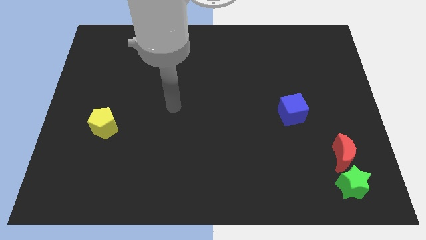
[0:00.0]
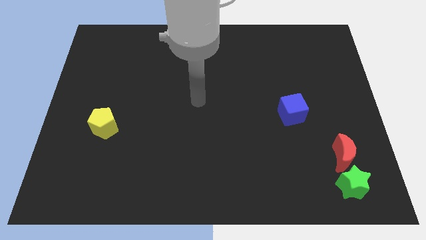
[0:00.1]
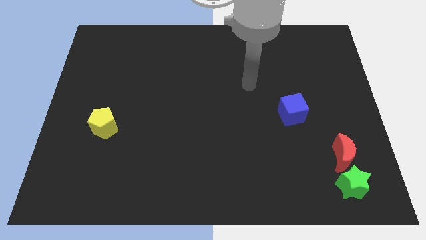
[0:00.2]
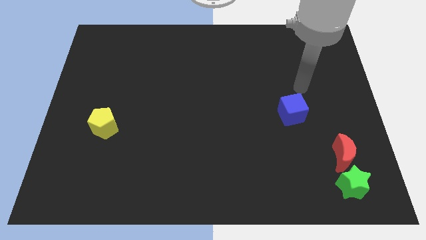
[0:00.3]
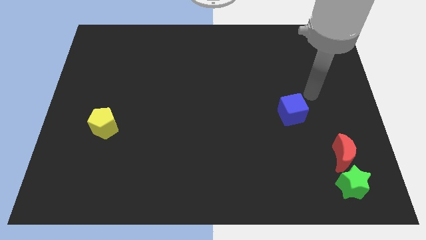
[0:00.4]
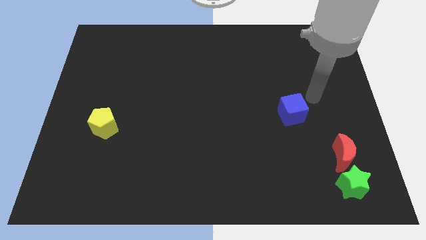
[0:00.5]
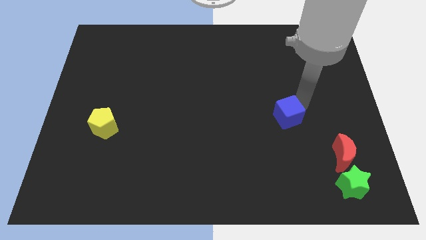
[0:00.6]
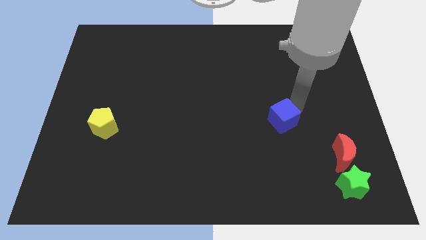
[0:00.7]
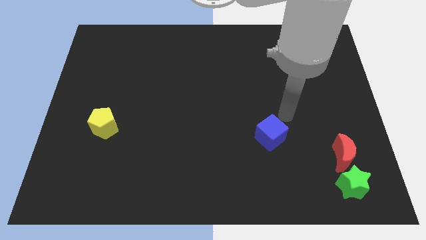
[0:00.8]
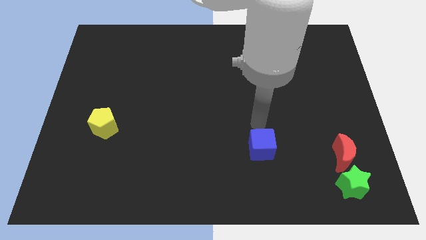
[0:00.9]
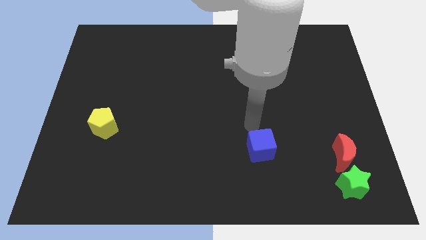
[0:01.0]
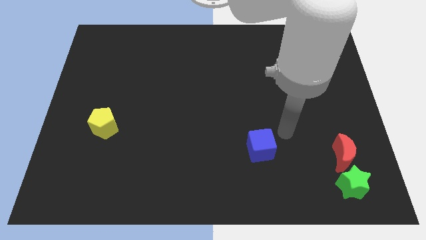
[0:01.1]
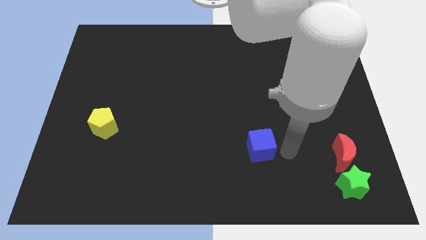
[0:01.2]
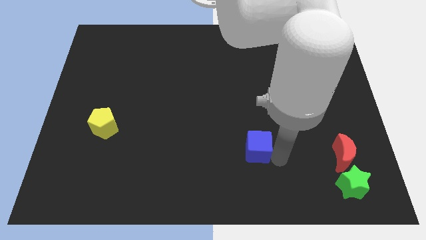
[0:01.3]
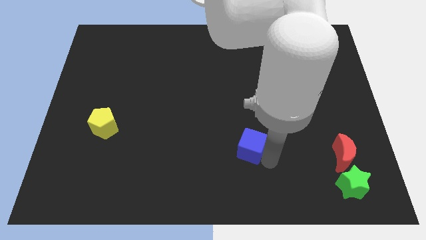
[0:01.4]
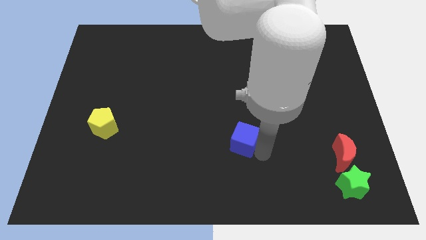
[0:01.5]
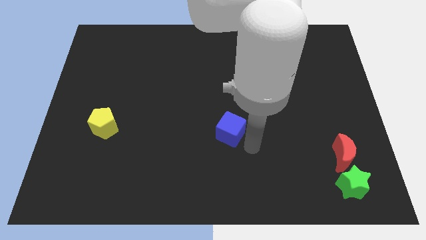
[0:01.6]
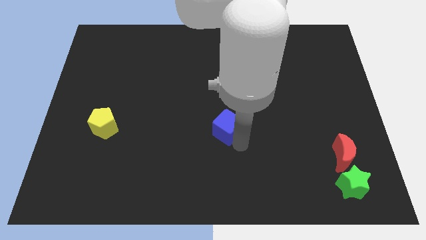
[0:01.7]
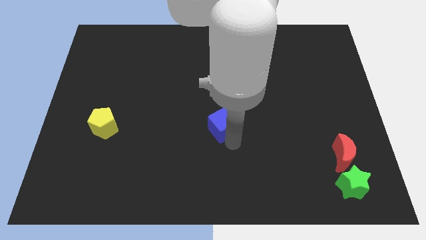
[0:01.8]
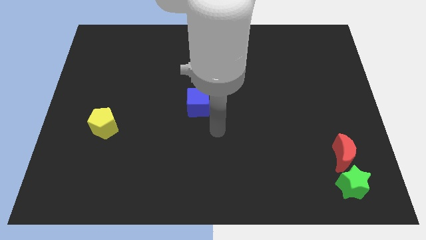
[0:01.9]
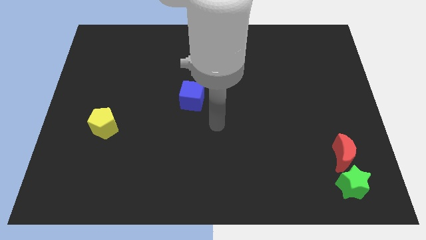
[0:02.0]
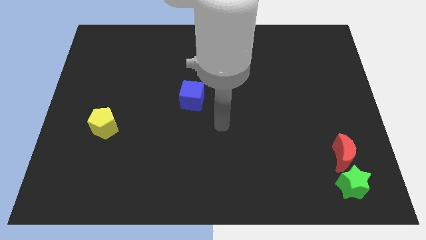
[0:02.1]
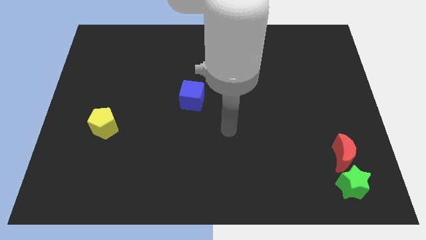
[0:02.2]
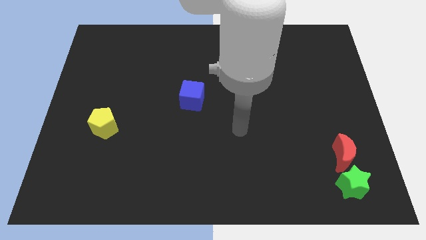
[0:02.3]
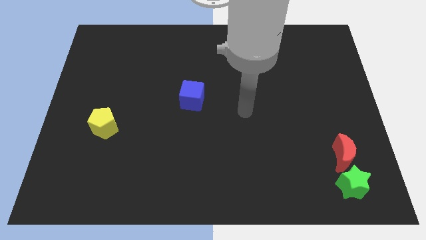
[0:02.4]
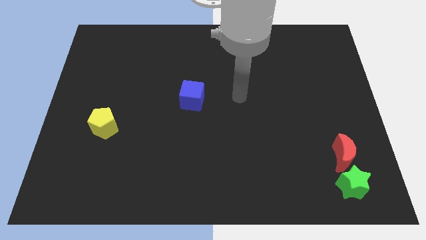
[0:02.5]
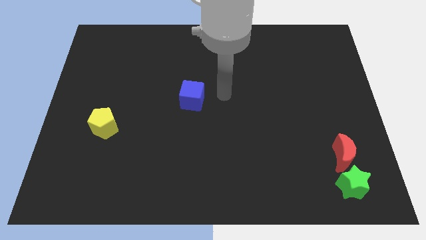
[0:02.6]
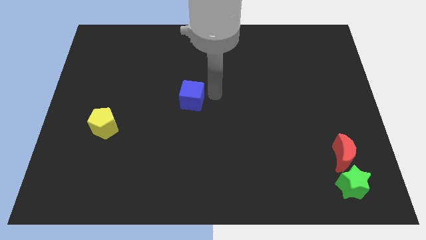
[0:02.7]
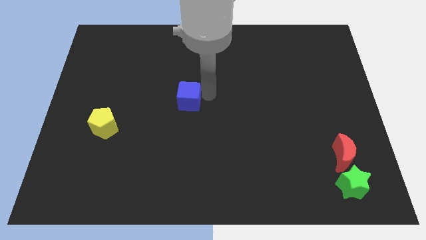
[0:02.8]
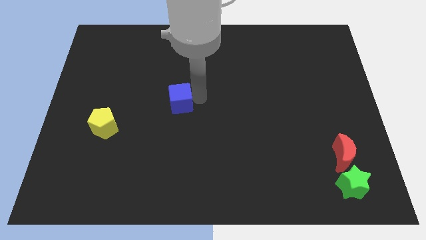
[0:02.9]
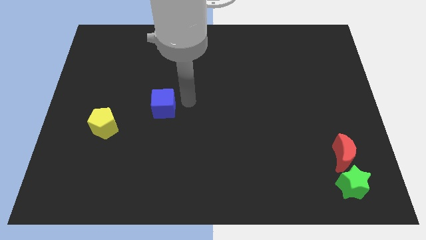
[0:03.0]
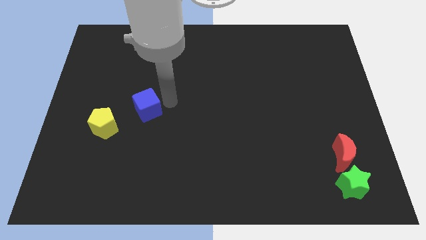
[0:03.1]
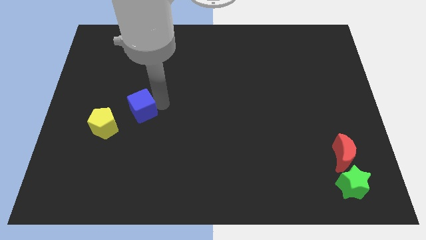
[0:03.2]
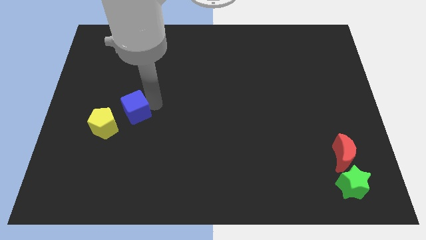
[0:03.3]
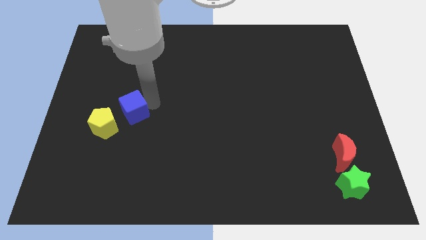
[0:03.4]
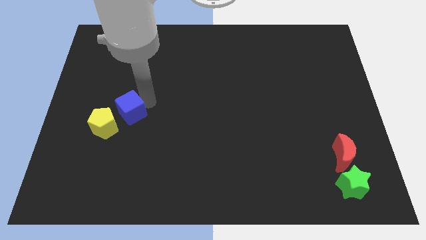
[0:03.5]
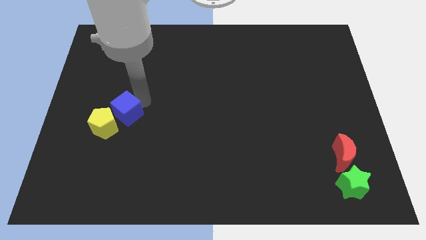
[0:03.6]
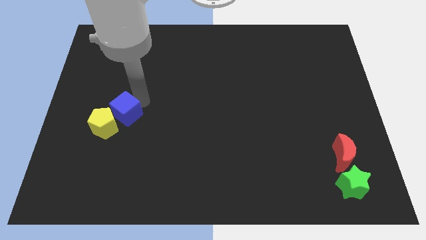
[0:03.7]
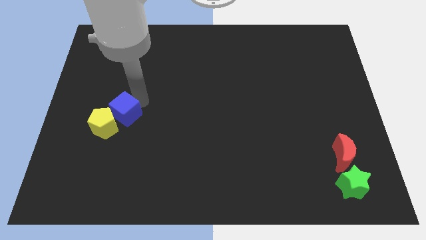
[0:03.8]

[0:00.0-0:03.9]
push the blue block close to the pentagon

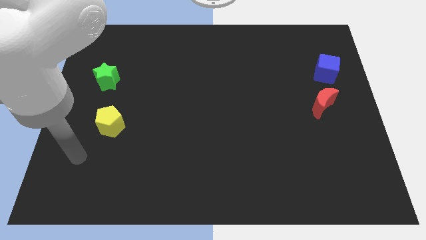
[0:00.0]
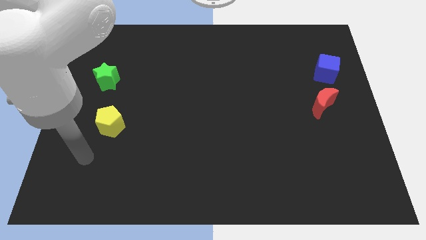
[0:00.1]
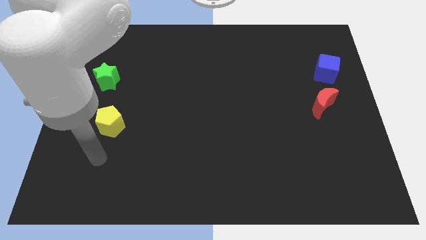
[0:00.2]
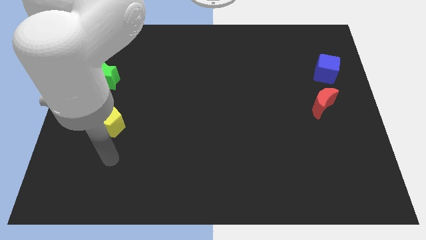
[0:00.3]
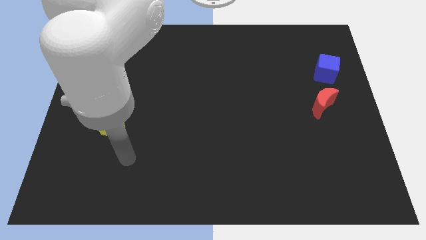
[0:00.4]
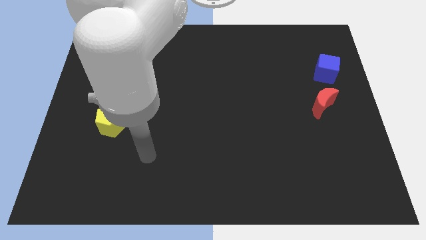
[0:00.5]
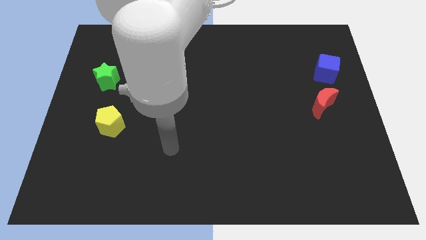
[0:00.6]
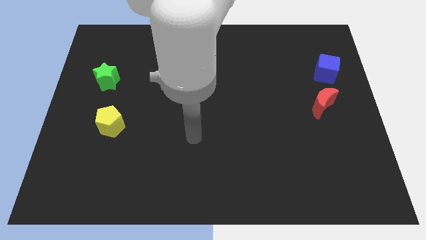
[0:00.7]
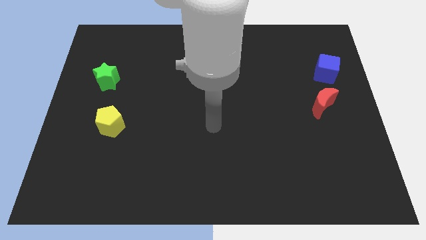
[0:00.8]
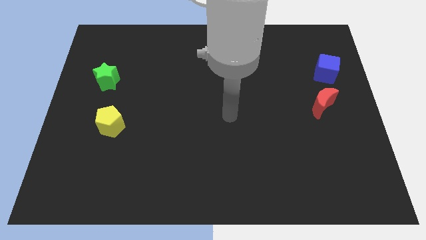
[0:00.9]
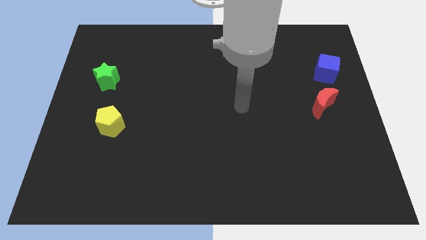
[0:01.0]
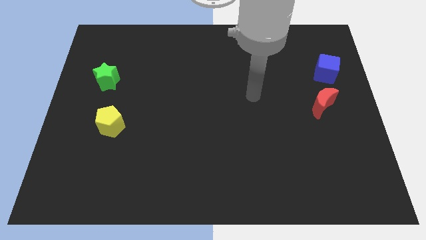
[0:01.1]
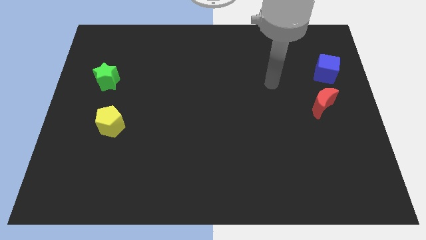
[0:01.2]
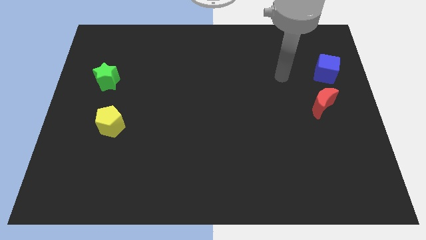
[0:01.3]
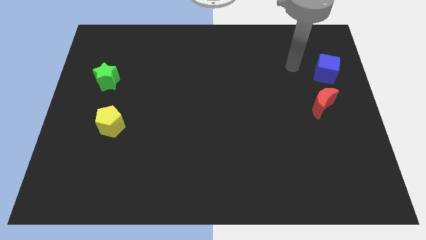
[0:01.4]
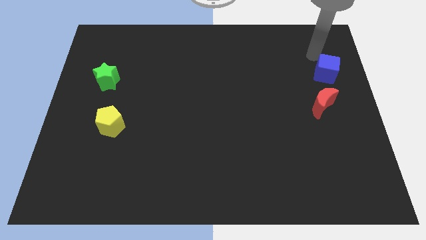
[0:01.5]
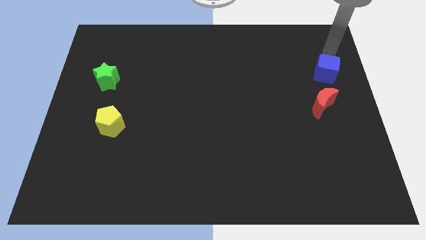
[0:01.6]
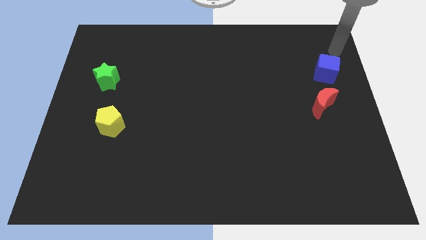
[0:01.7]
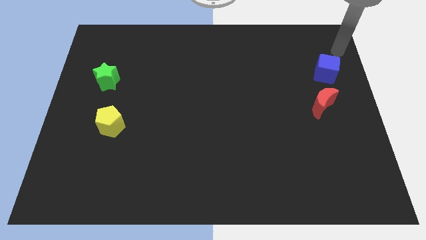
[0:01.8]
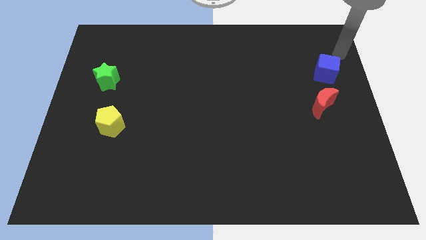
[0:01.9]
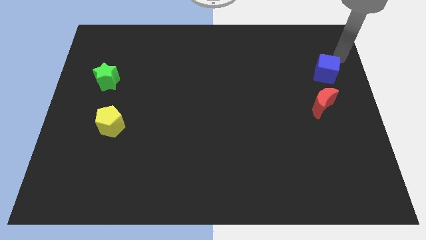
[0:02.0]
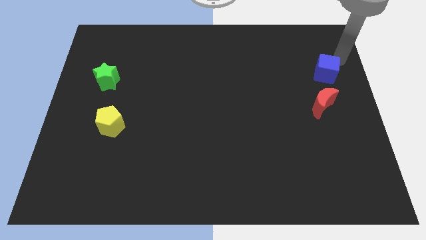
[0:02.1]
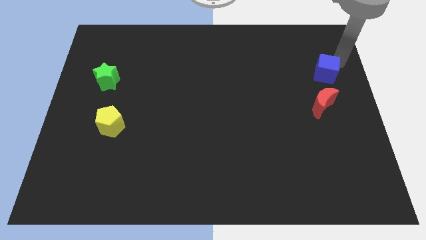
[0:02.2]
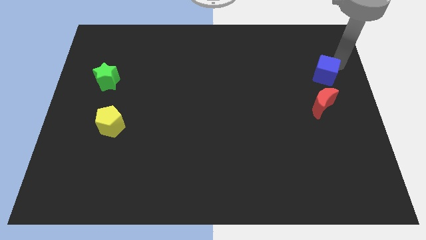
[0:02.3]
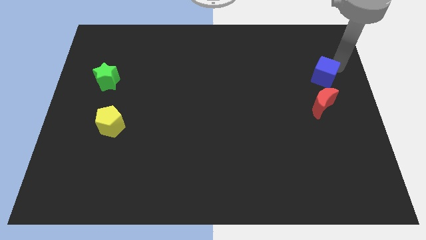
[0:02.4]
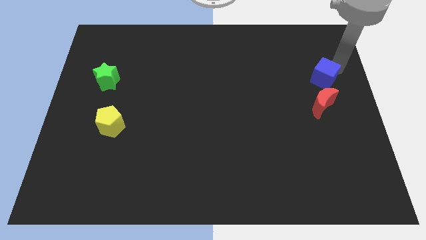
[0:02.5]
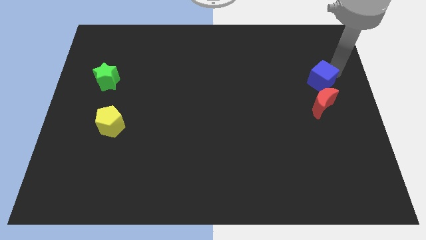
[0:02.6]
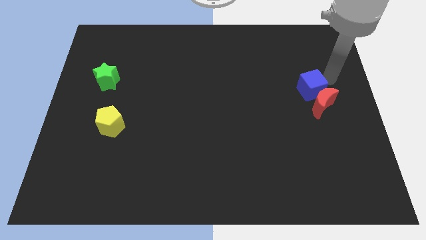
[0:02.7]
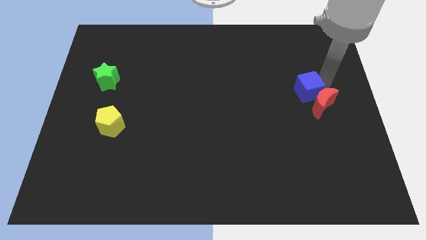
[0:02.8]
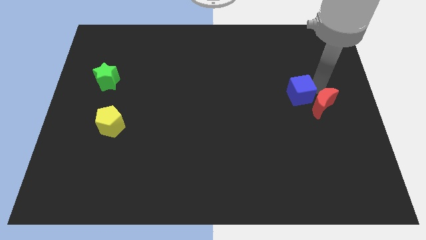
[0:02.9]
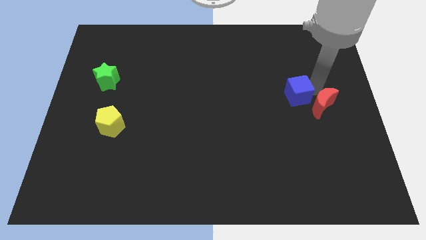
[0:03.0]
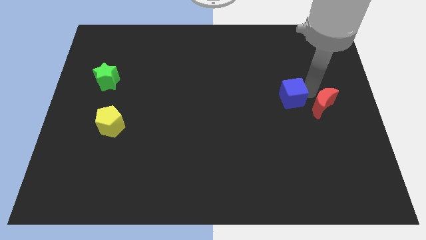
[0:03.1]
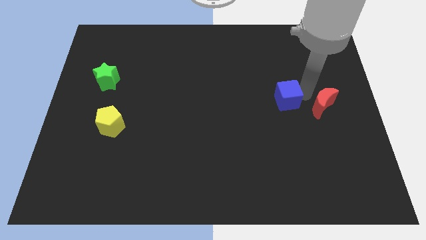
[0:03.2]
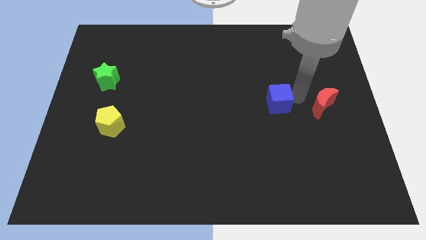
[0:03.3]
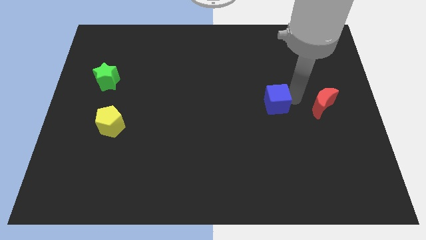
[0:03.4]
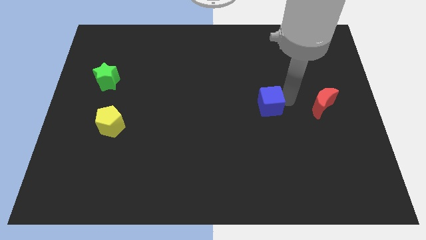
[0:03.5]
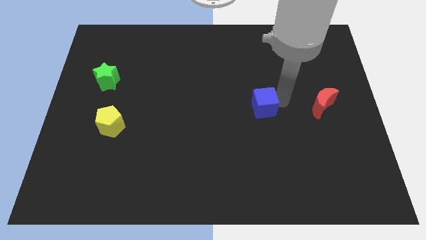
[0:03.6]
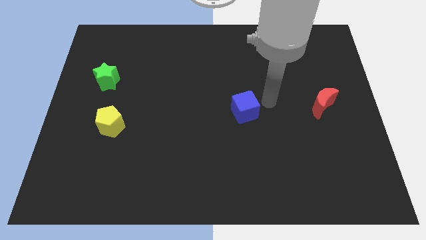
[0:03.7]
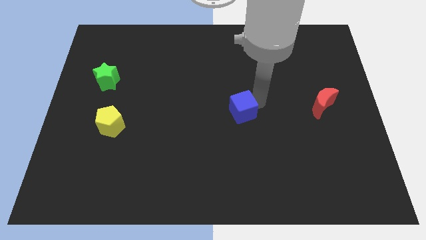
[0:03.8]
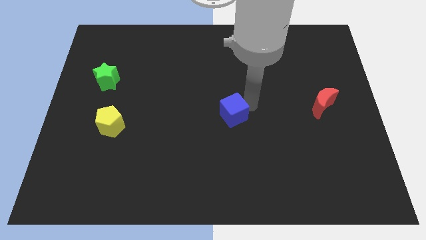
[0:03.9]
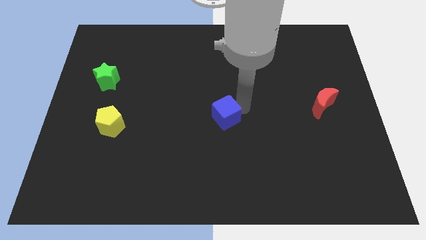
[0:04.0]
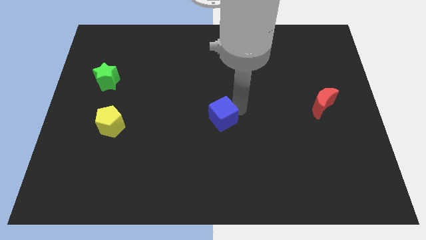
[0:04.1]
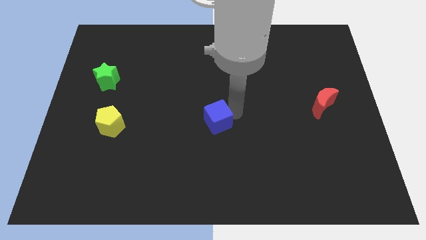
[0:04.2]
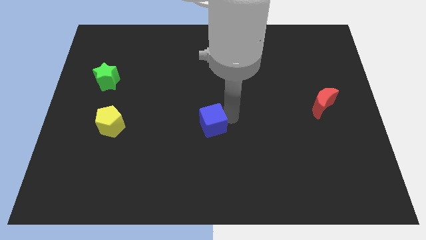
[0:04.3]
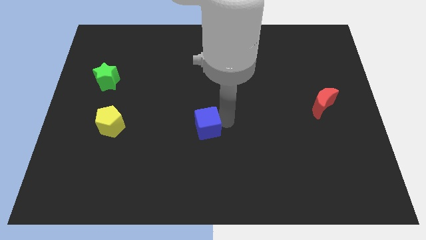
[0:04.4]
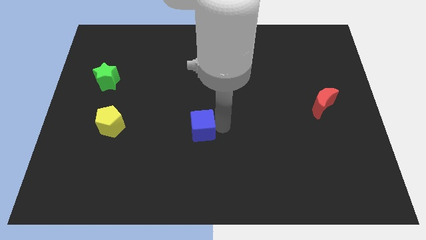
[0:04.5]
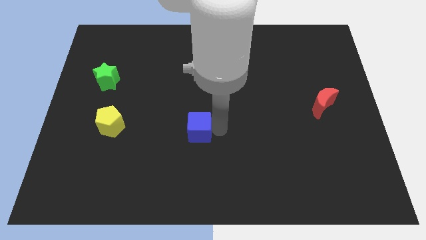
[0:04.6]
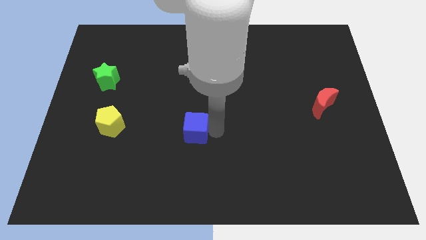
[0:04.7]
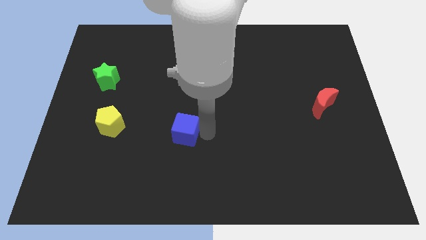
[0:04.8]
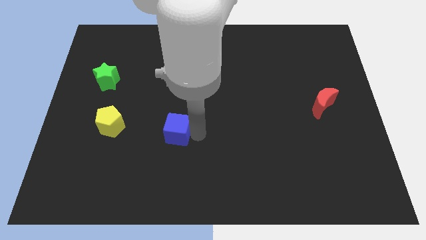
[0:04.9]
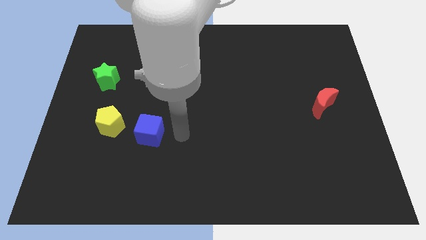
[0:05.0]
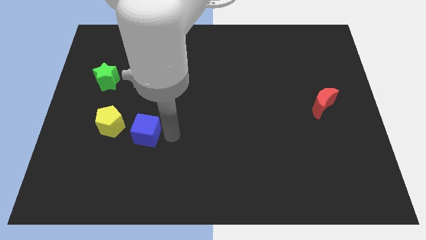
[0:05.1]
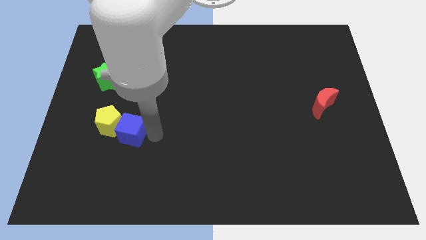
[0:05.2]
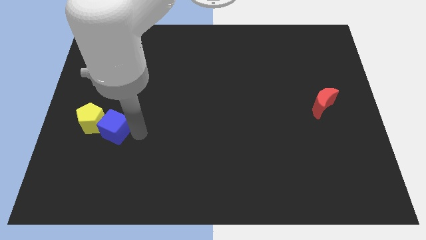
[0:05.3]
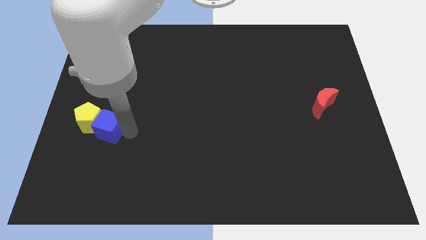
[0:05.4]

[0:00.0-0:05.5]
put the blue block next to the pentagon
